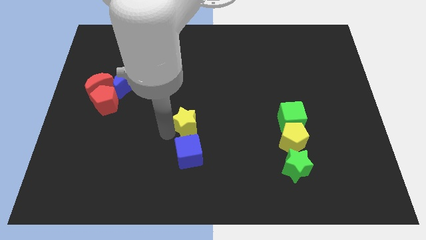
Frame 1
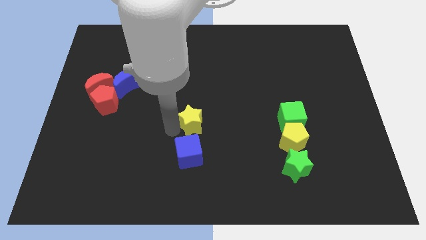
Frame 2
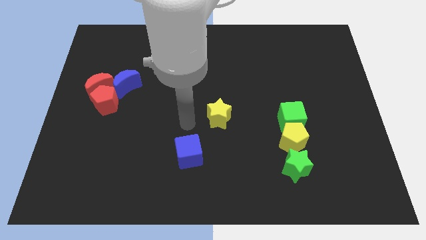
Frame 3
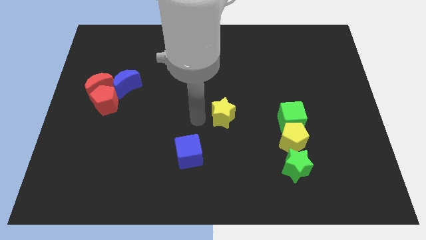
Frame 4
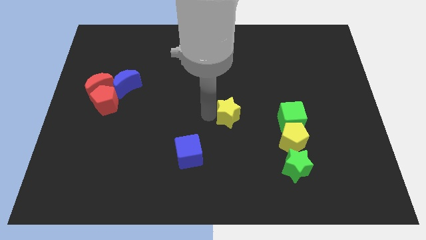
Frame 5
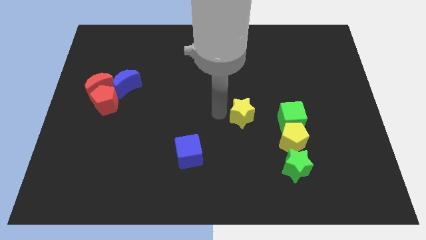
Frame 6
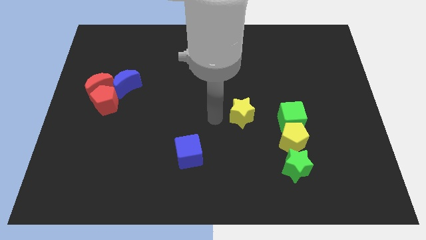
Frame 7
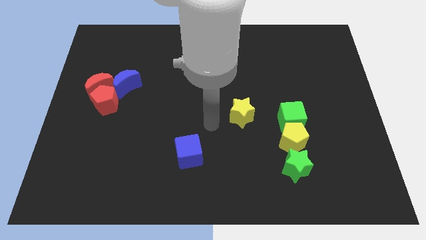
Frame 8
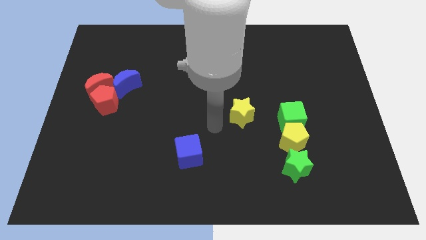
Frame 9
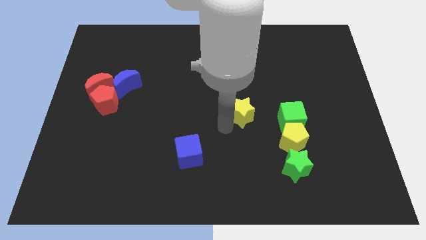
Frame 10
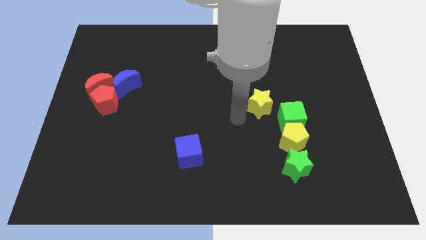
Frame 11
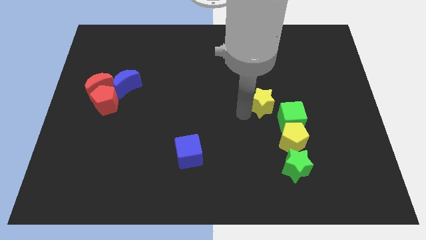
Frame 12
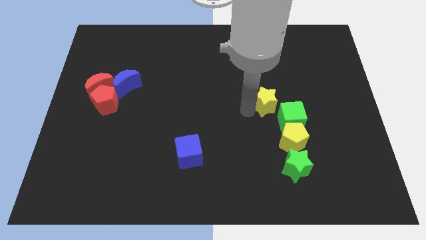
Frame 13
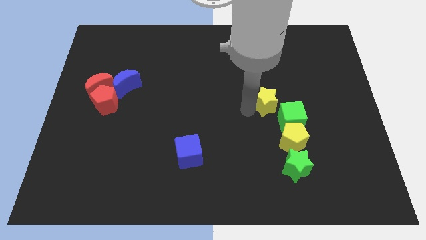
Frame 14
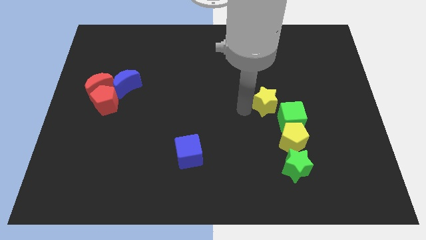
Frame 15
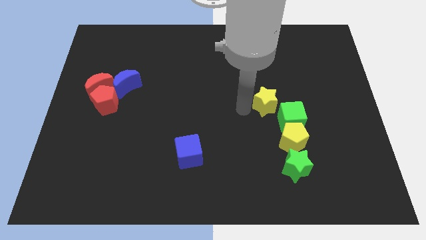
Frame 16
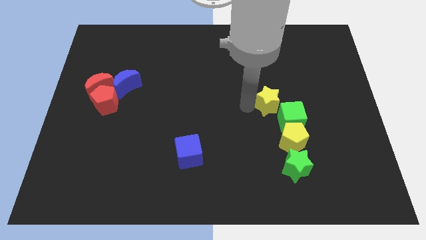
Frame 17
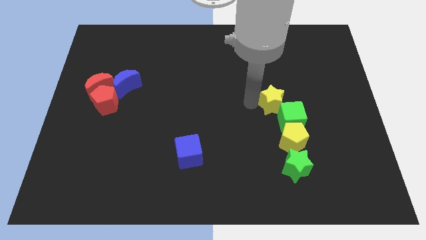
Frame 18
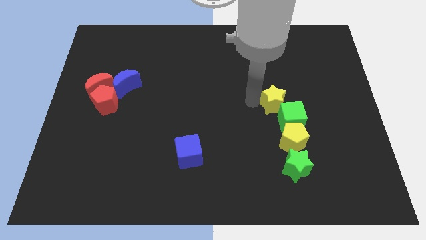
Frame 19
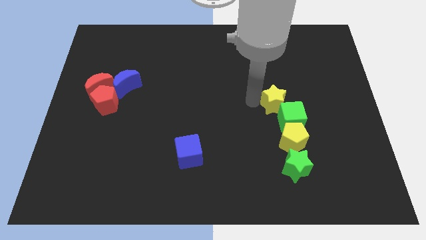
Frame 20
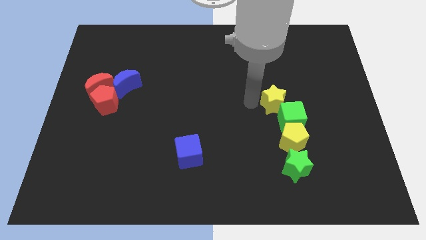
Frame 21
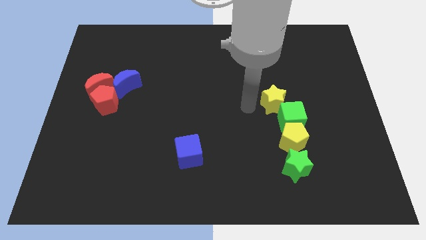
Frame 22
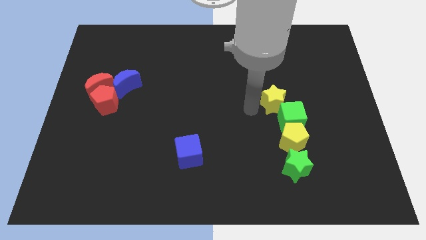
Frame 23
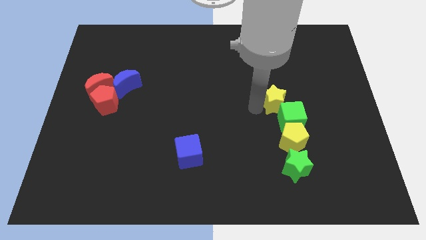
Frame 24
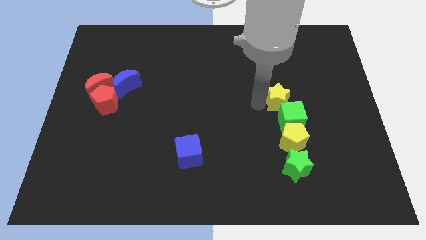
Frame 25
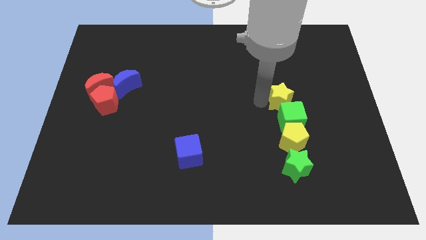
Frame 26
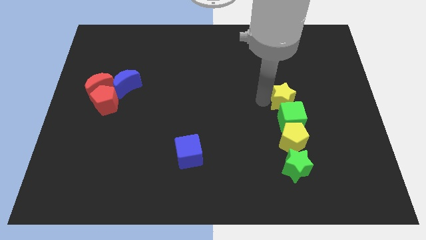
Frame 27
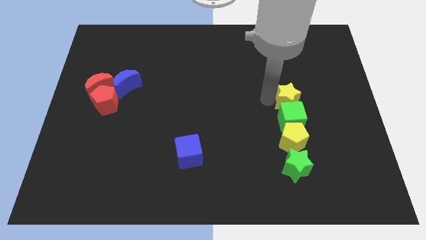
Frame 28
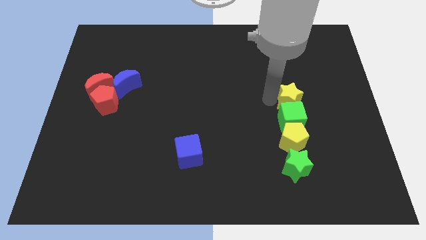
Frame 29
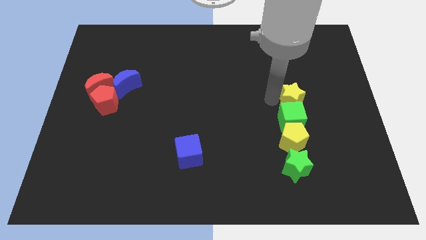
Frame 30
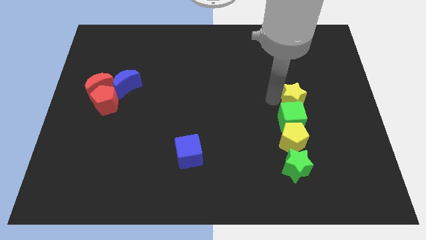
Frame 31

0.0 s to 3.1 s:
place the yellow star to the top of the green cube

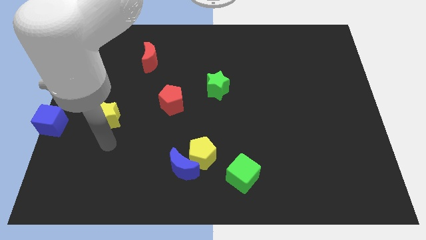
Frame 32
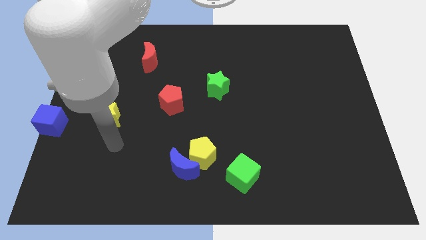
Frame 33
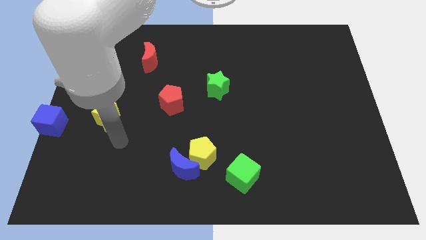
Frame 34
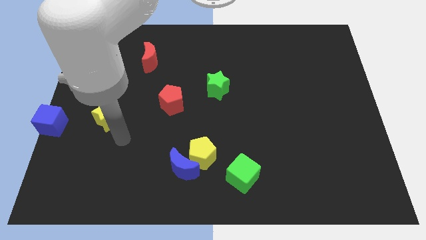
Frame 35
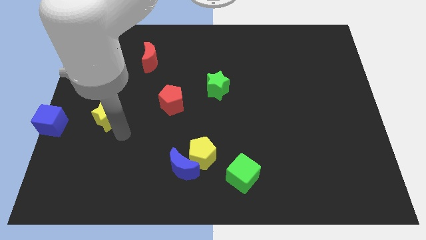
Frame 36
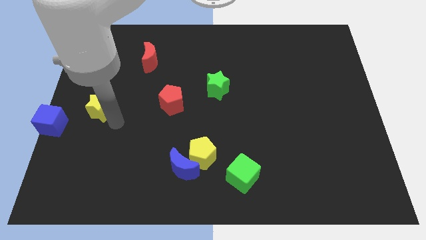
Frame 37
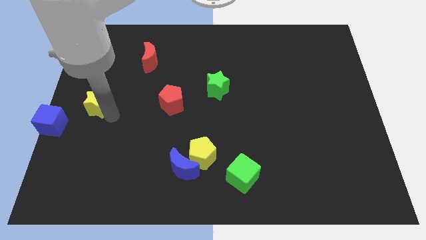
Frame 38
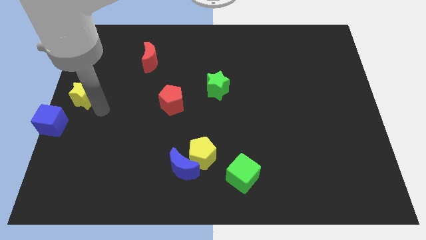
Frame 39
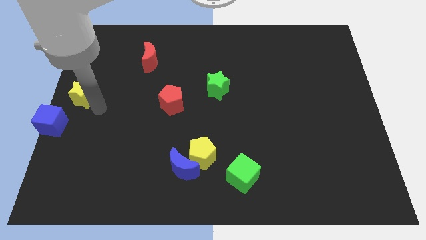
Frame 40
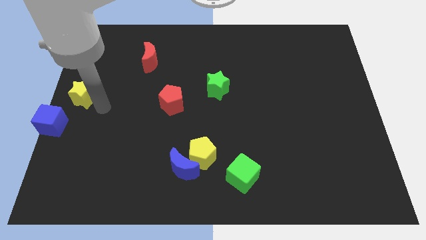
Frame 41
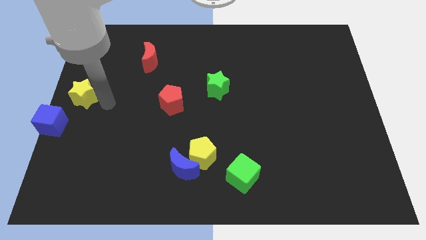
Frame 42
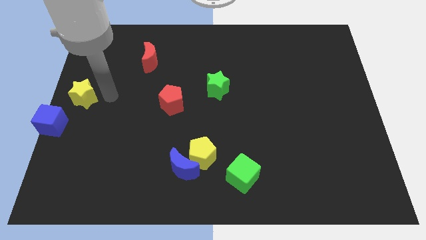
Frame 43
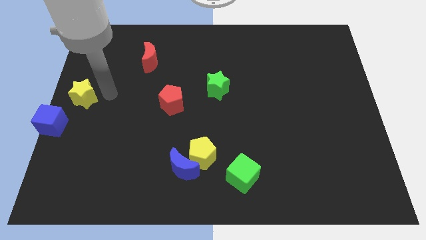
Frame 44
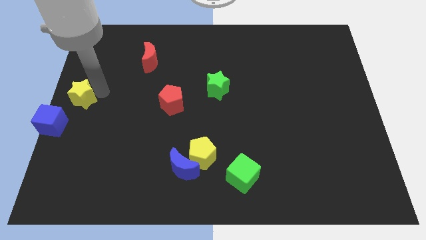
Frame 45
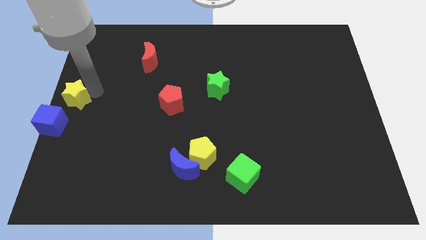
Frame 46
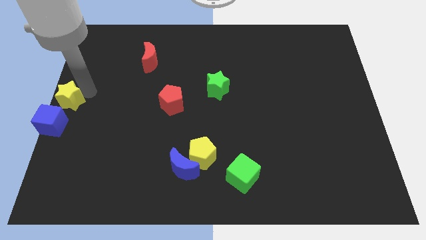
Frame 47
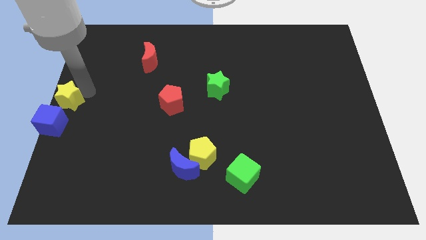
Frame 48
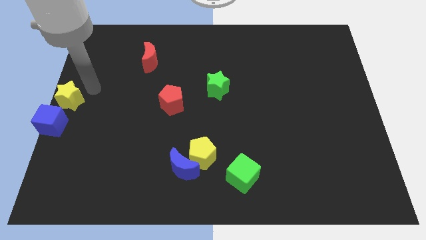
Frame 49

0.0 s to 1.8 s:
push the yellow star at the top side of the blue cube

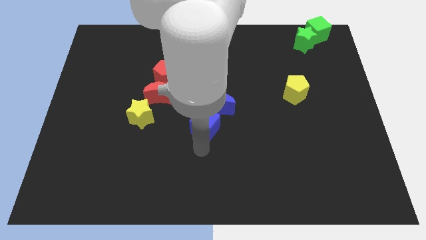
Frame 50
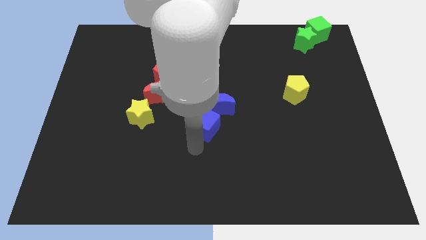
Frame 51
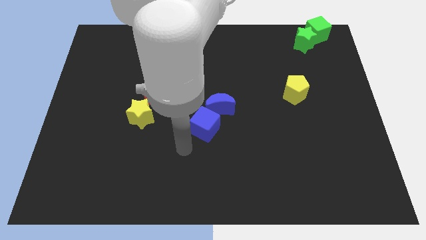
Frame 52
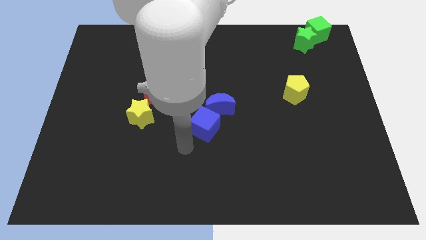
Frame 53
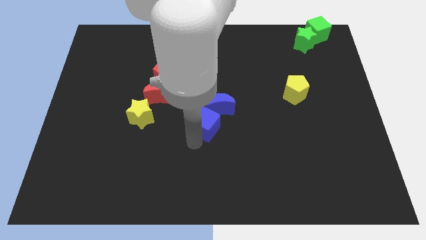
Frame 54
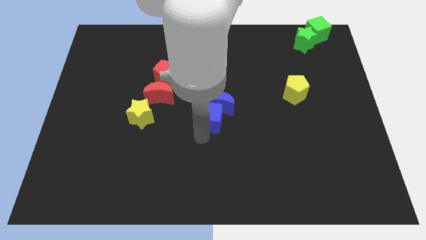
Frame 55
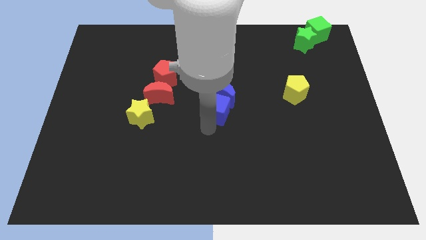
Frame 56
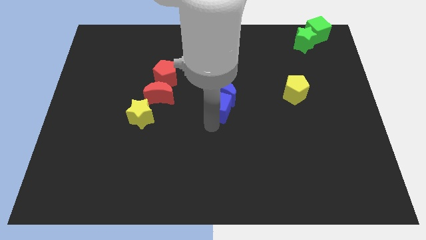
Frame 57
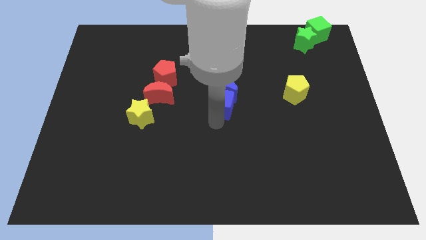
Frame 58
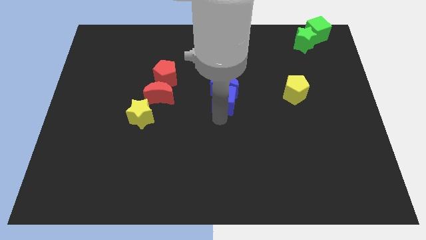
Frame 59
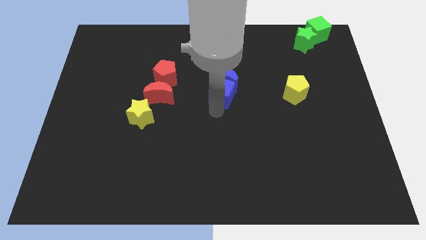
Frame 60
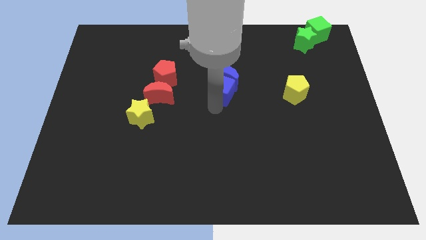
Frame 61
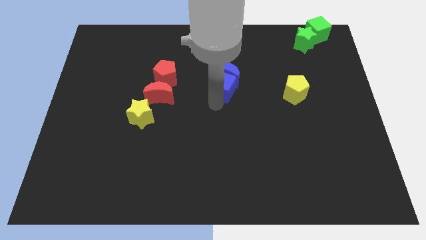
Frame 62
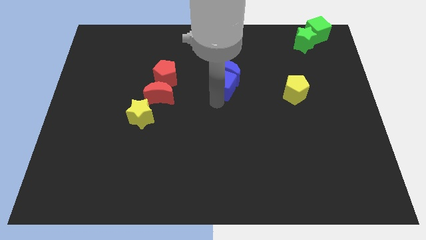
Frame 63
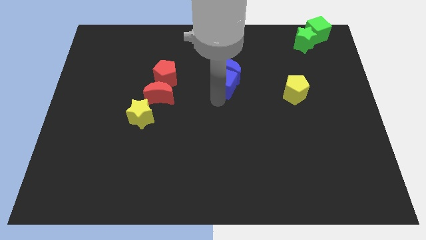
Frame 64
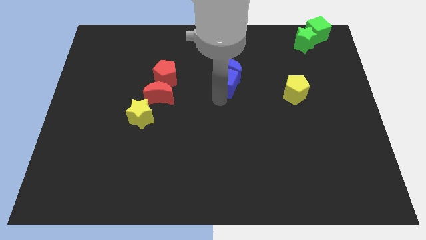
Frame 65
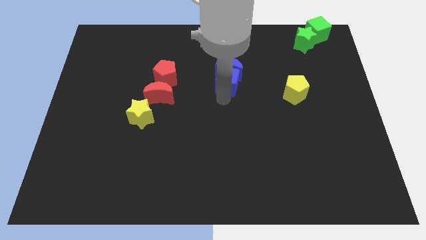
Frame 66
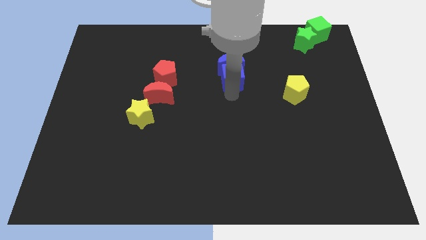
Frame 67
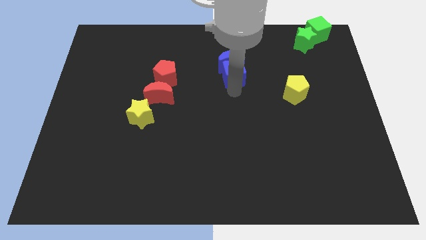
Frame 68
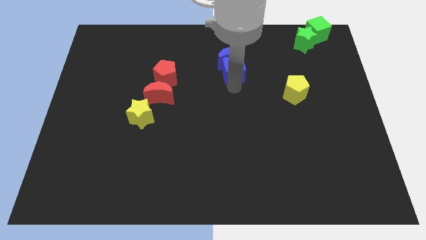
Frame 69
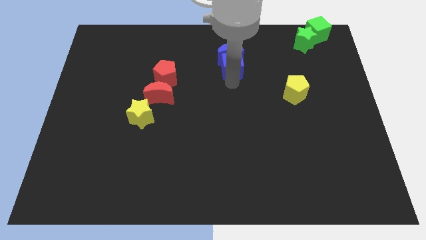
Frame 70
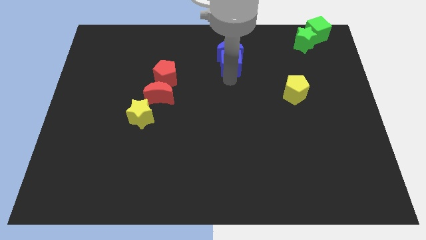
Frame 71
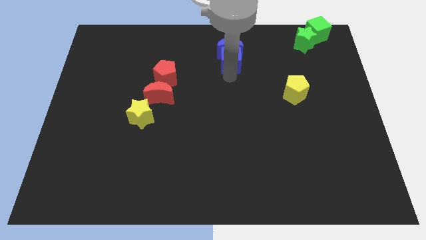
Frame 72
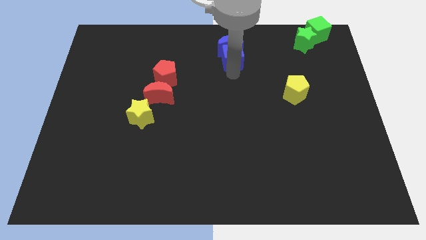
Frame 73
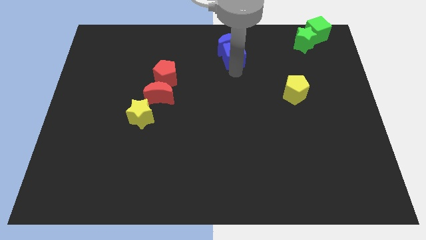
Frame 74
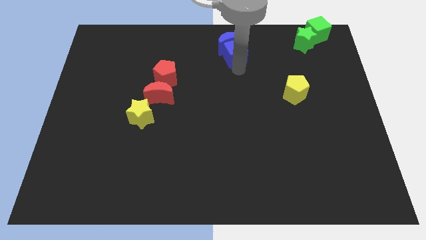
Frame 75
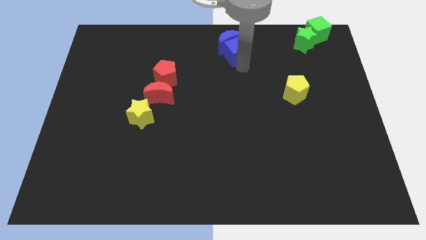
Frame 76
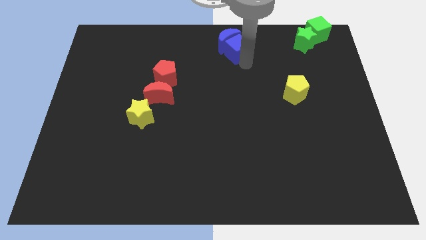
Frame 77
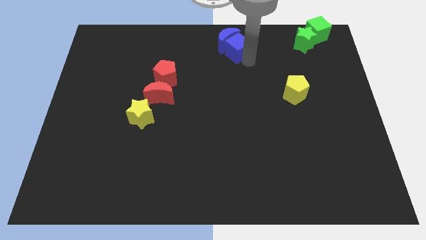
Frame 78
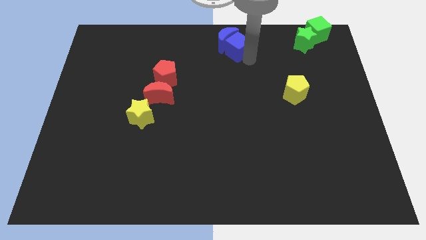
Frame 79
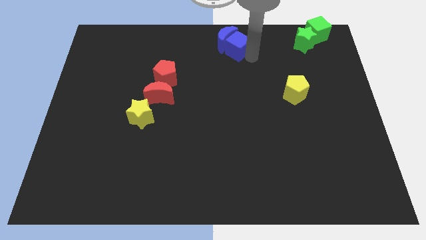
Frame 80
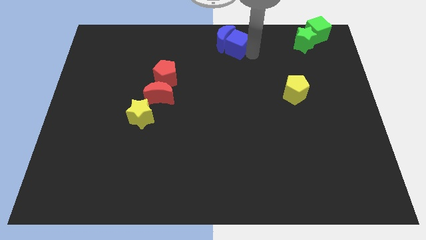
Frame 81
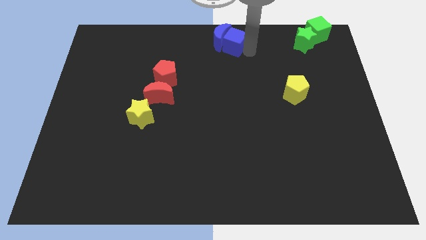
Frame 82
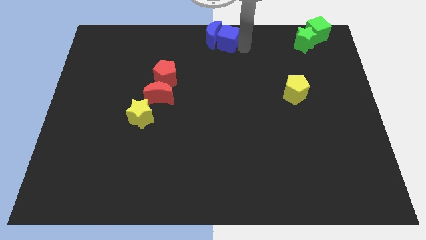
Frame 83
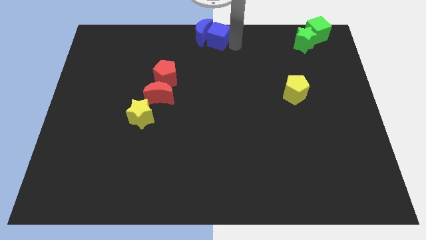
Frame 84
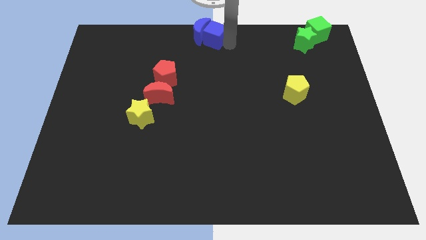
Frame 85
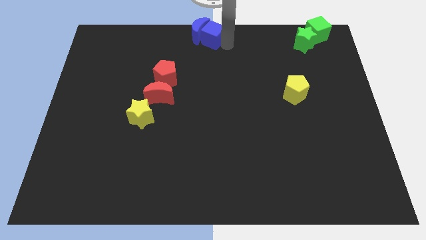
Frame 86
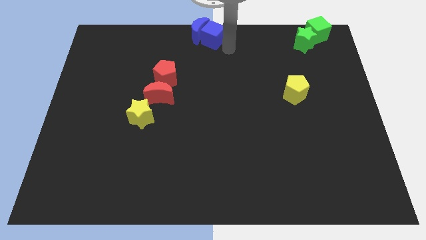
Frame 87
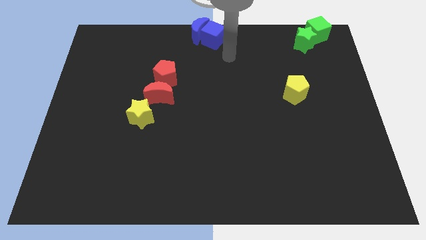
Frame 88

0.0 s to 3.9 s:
place the blue moon and blue cube at the top center of the board
